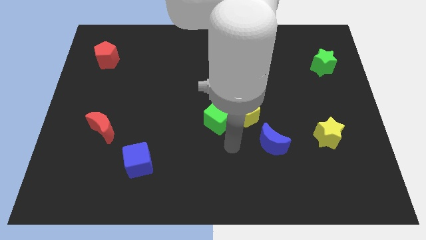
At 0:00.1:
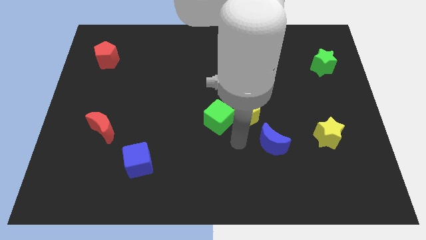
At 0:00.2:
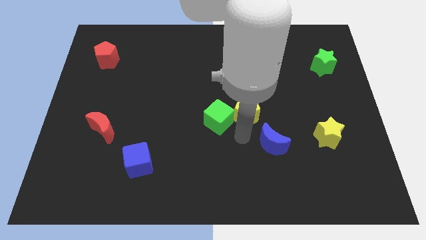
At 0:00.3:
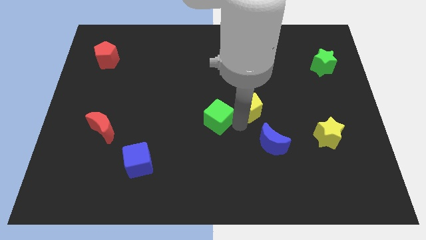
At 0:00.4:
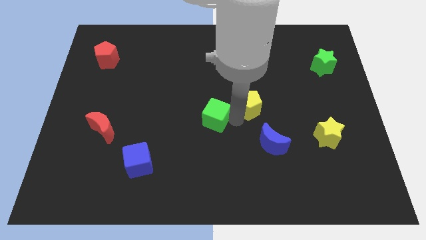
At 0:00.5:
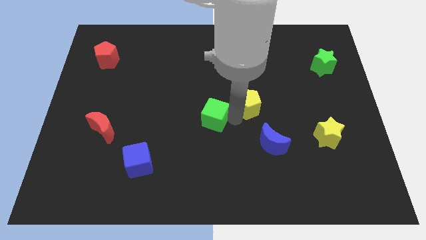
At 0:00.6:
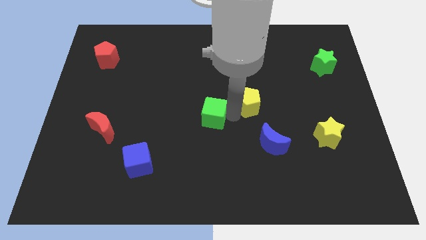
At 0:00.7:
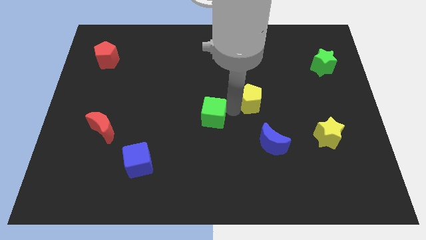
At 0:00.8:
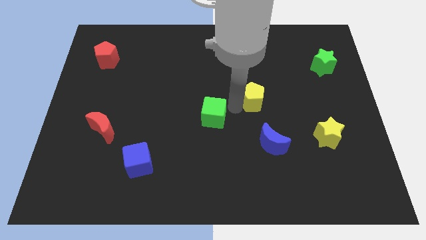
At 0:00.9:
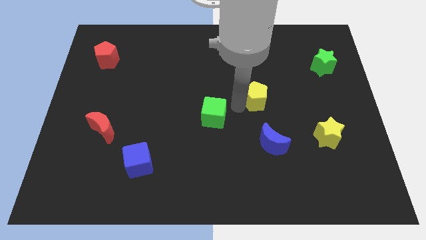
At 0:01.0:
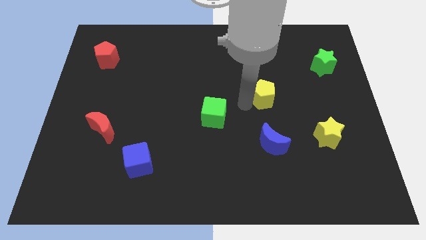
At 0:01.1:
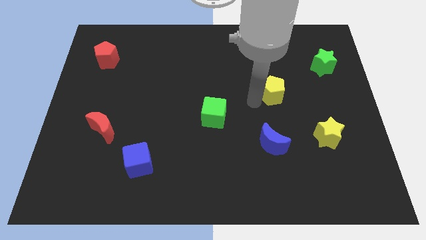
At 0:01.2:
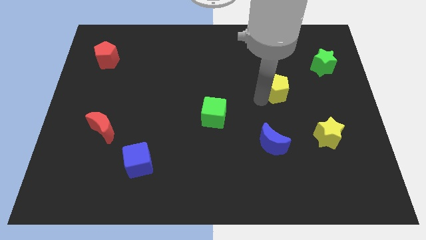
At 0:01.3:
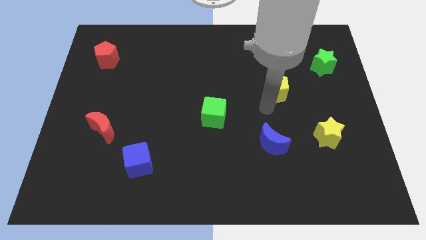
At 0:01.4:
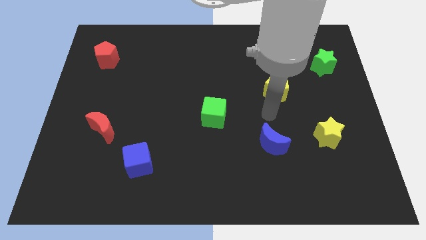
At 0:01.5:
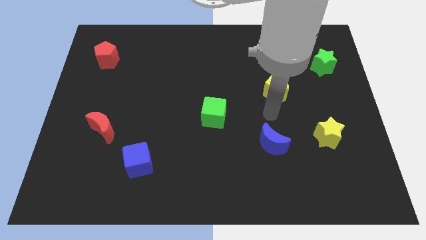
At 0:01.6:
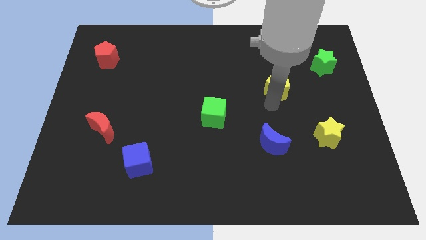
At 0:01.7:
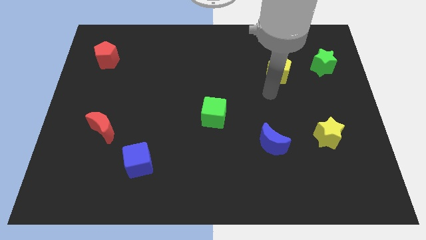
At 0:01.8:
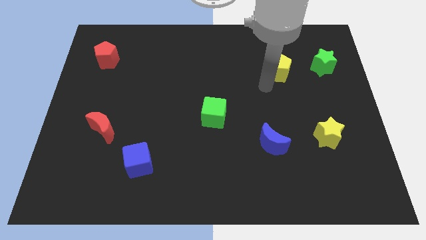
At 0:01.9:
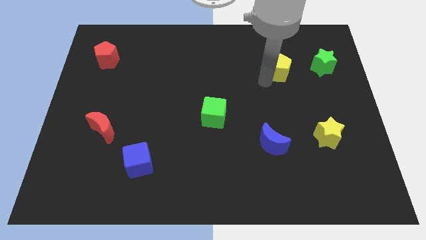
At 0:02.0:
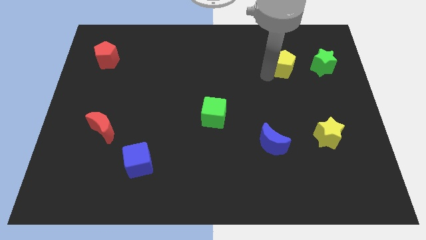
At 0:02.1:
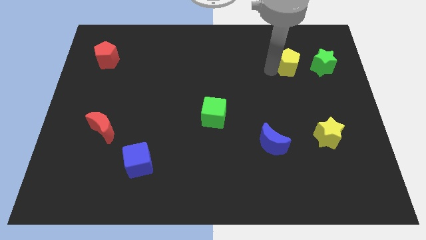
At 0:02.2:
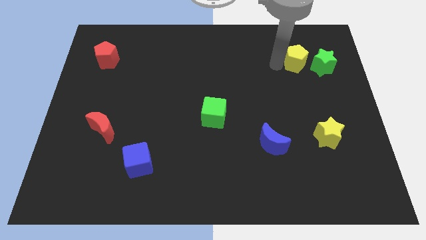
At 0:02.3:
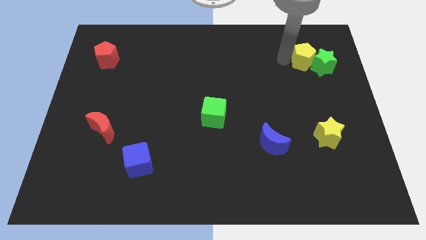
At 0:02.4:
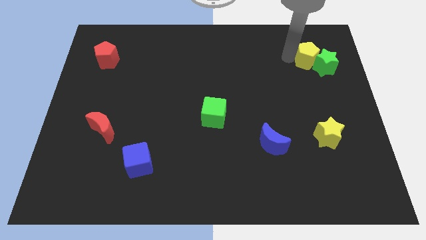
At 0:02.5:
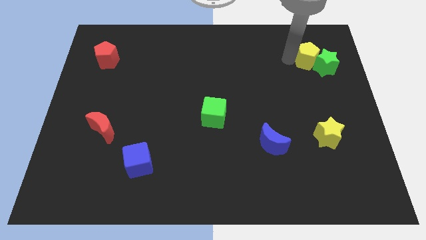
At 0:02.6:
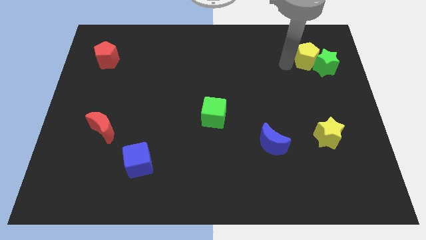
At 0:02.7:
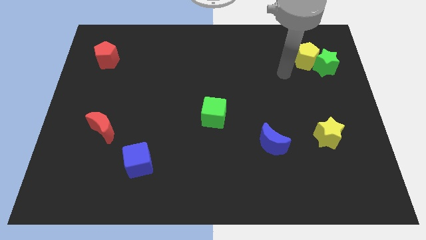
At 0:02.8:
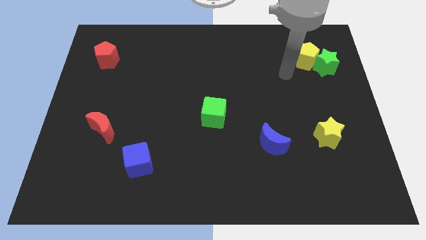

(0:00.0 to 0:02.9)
place the yellow pentagon to the left of the green star

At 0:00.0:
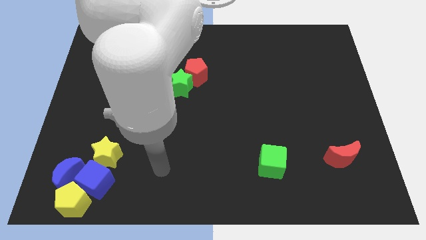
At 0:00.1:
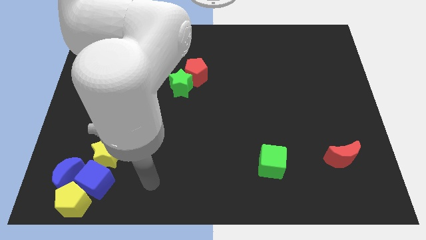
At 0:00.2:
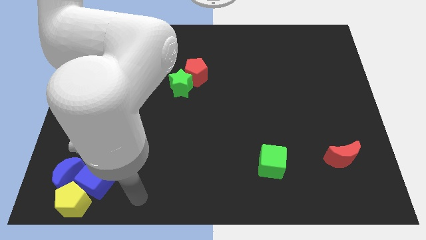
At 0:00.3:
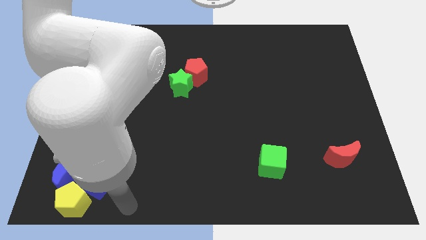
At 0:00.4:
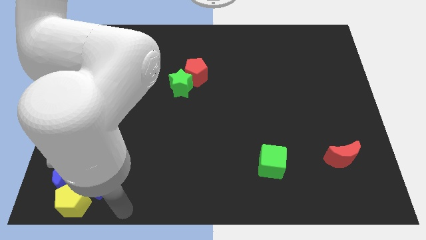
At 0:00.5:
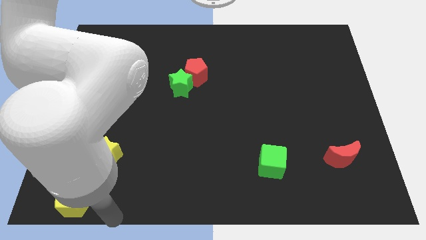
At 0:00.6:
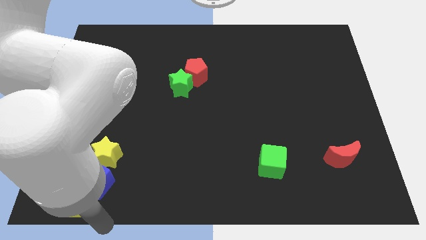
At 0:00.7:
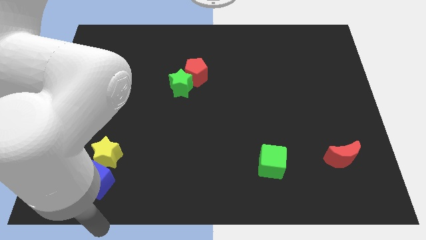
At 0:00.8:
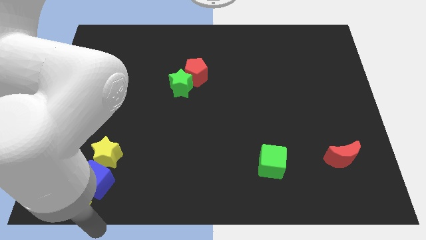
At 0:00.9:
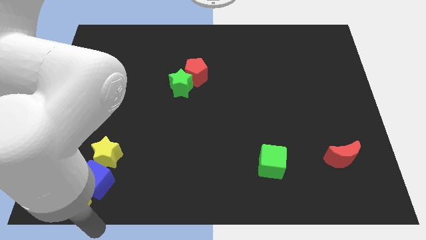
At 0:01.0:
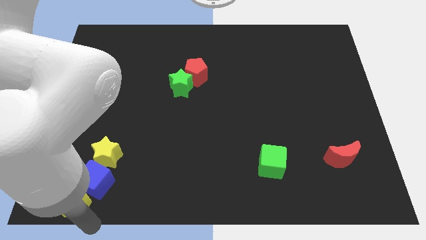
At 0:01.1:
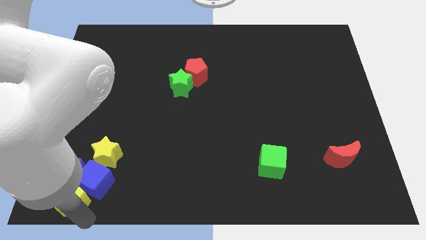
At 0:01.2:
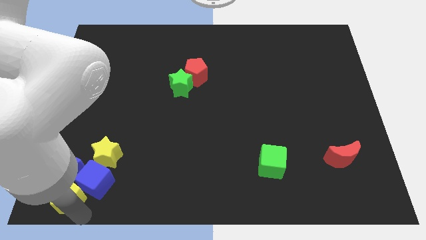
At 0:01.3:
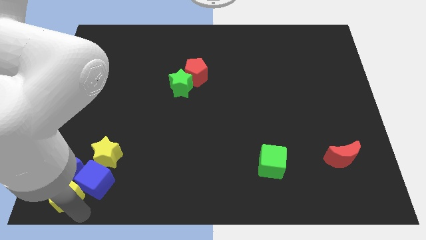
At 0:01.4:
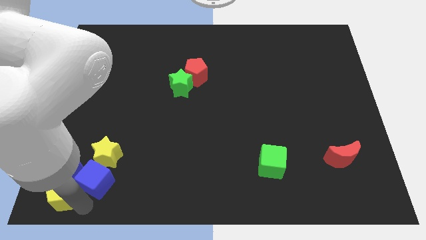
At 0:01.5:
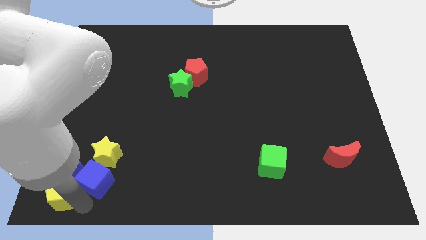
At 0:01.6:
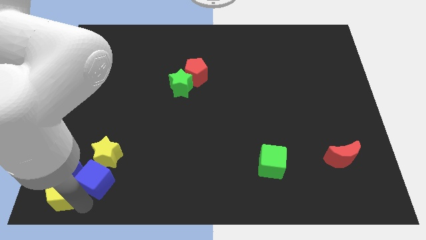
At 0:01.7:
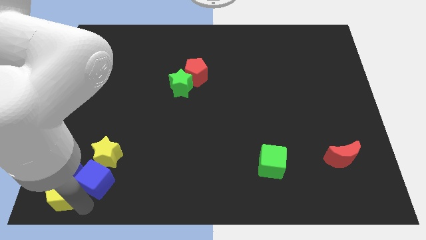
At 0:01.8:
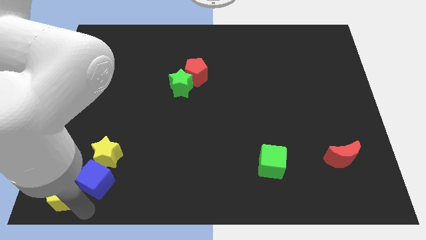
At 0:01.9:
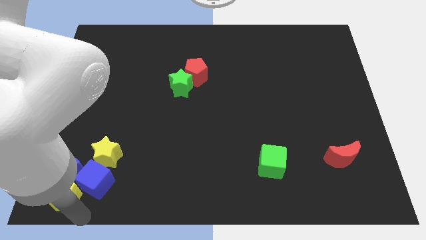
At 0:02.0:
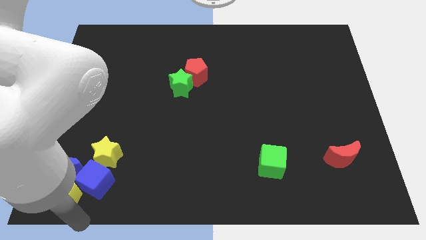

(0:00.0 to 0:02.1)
place your hand below yellow pentagon

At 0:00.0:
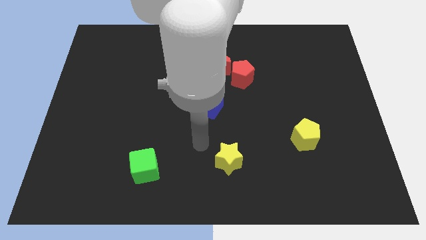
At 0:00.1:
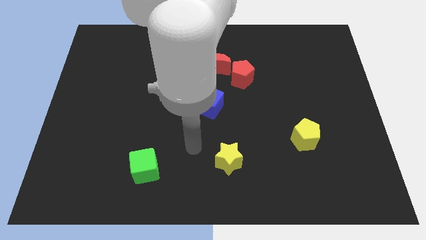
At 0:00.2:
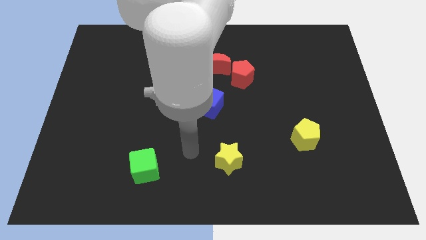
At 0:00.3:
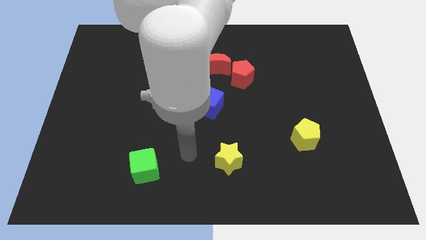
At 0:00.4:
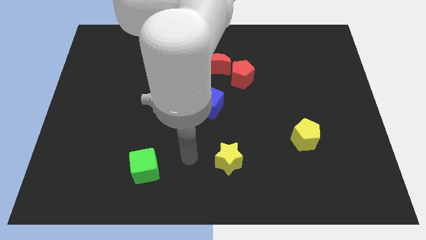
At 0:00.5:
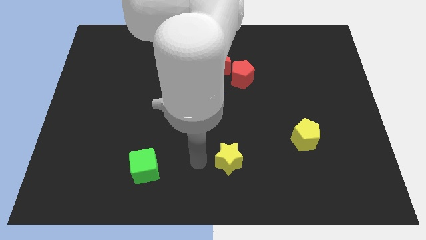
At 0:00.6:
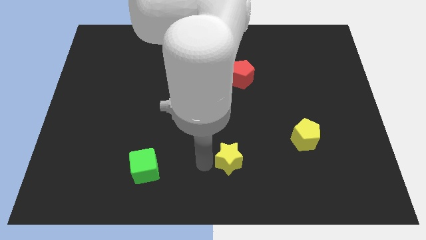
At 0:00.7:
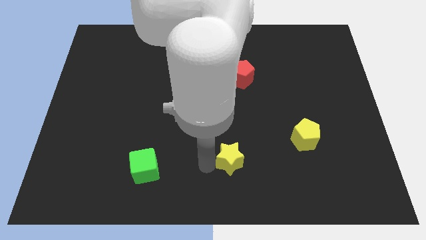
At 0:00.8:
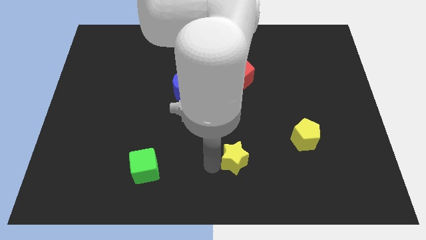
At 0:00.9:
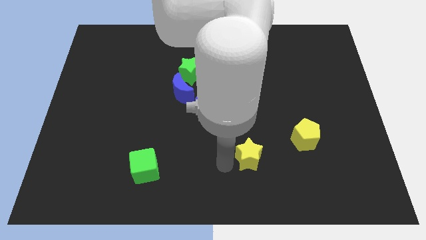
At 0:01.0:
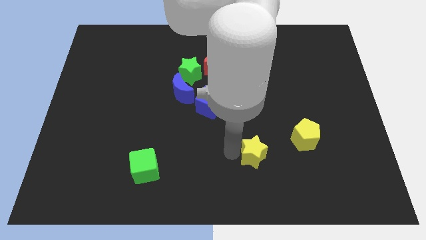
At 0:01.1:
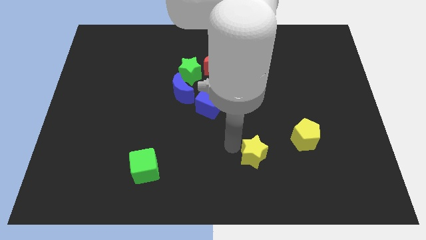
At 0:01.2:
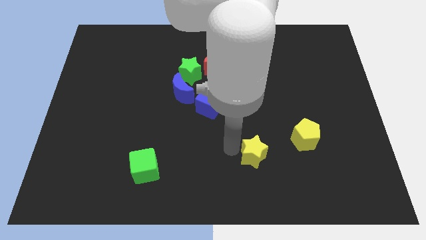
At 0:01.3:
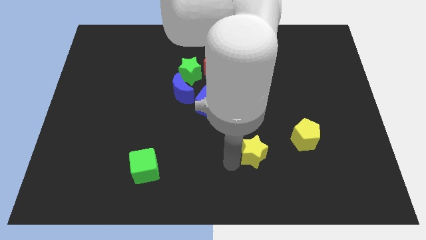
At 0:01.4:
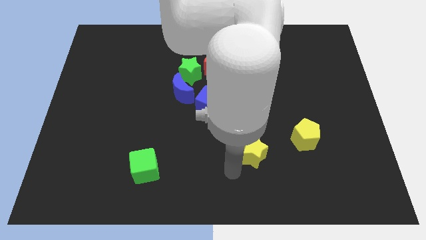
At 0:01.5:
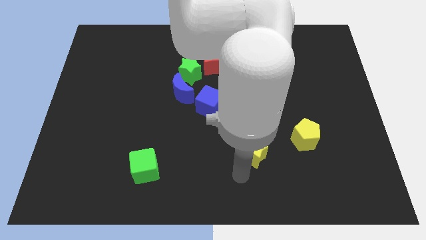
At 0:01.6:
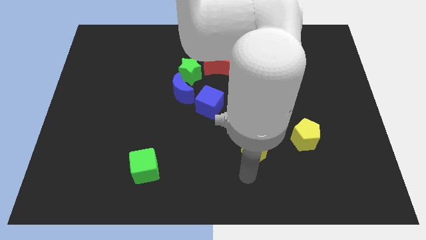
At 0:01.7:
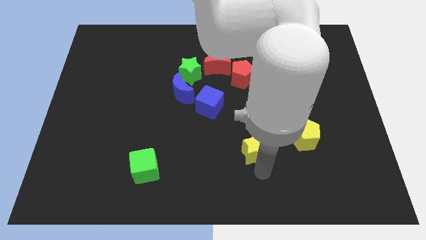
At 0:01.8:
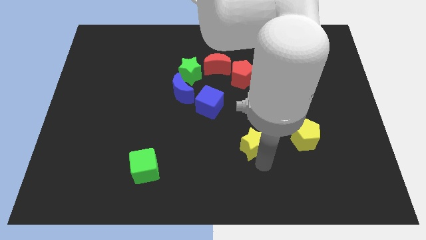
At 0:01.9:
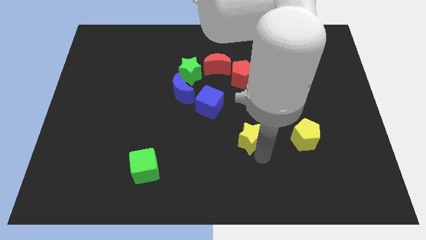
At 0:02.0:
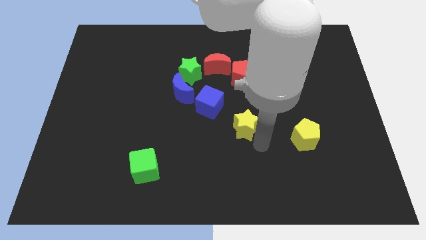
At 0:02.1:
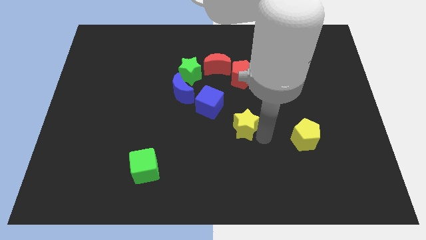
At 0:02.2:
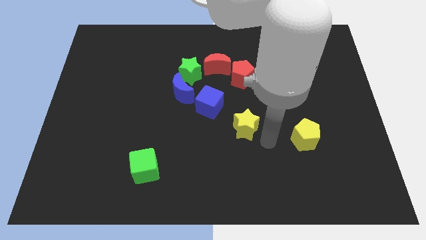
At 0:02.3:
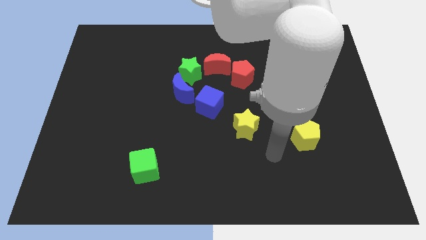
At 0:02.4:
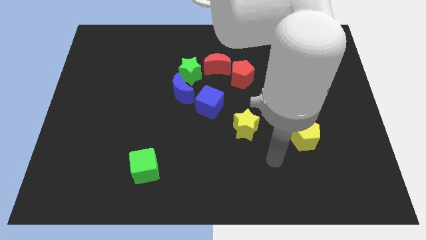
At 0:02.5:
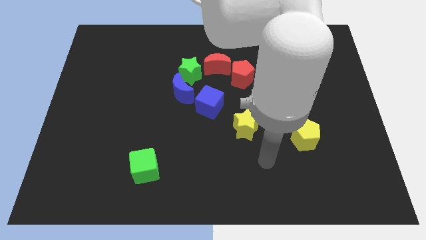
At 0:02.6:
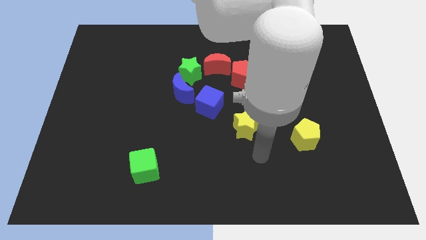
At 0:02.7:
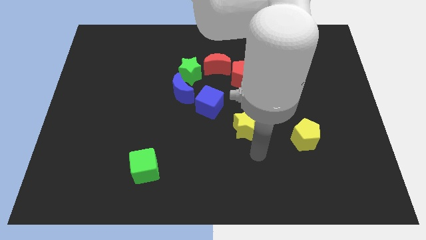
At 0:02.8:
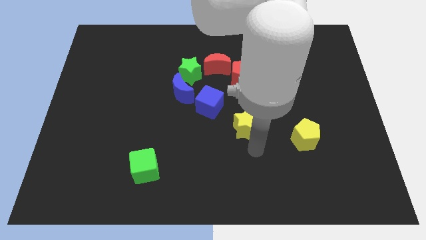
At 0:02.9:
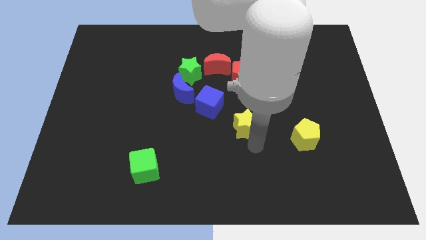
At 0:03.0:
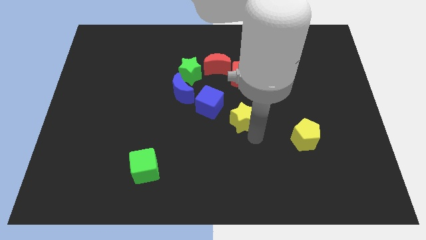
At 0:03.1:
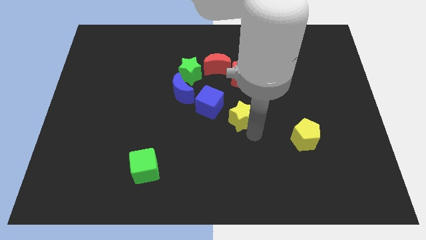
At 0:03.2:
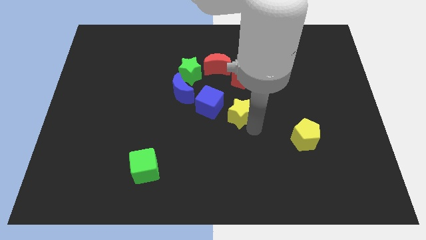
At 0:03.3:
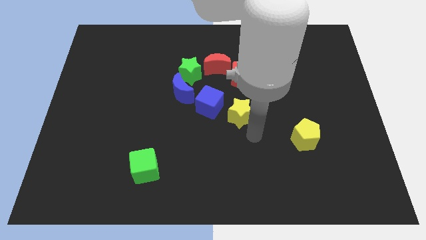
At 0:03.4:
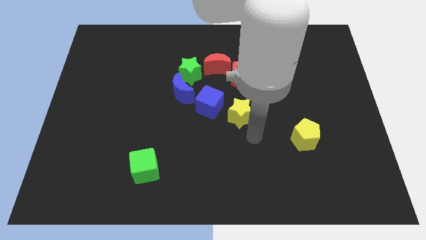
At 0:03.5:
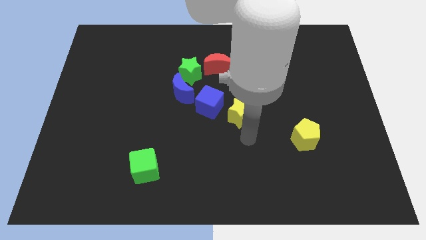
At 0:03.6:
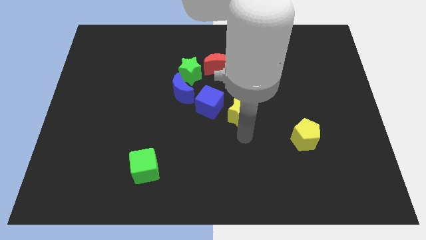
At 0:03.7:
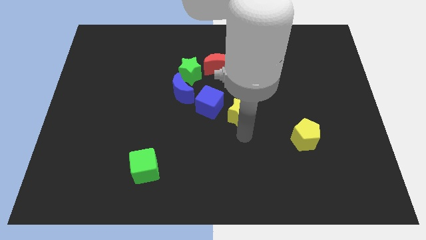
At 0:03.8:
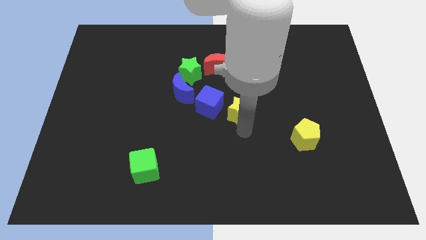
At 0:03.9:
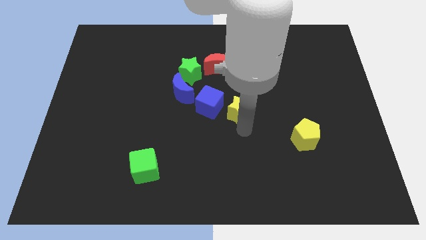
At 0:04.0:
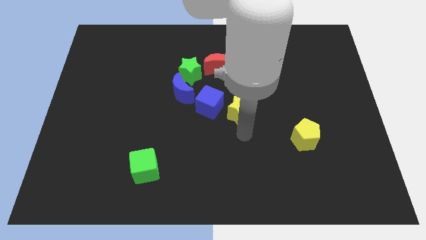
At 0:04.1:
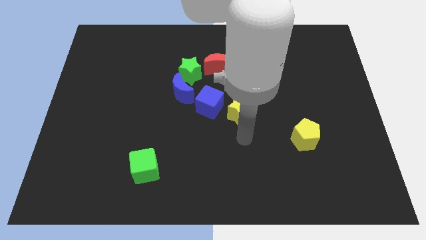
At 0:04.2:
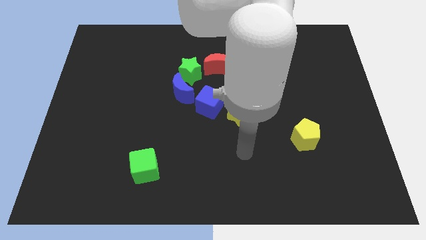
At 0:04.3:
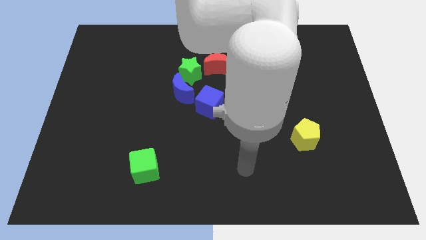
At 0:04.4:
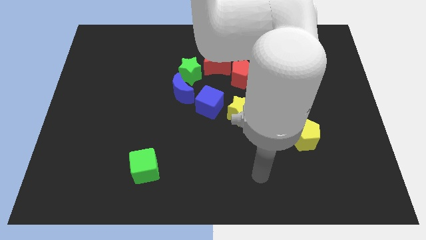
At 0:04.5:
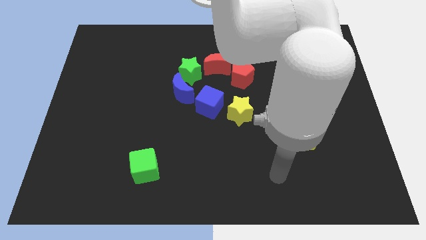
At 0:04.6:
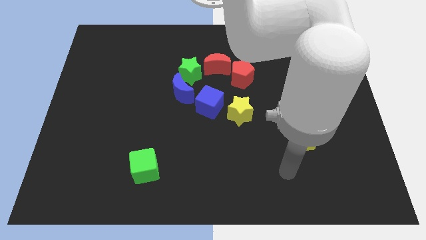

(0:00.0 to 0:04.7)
push the yellow star to the right of the blue cube
